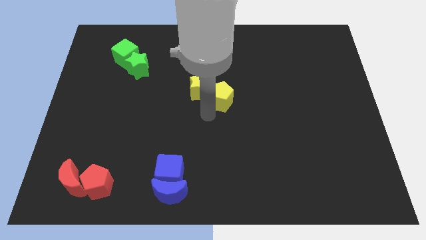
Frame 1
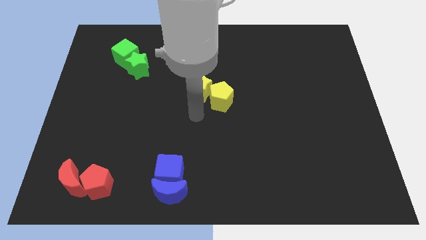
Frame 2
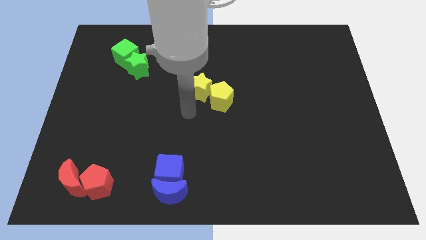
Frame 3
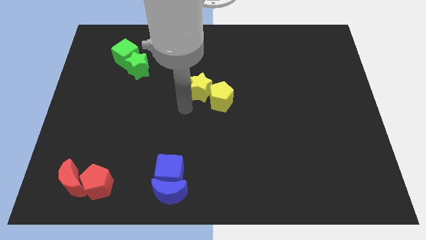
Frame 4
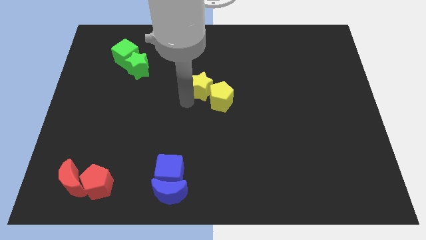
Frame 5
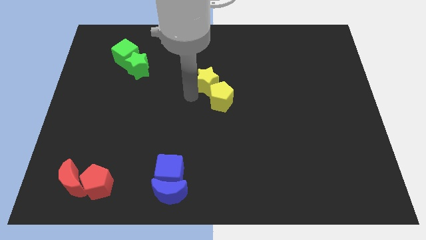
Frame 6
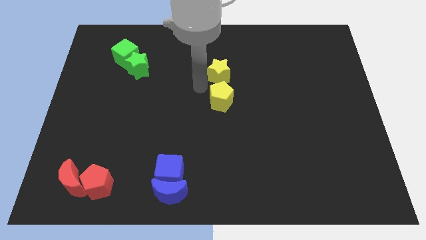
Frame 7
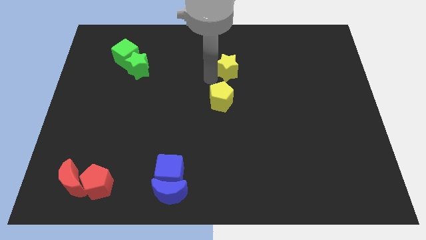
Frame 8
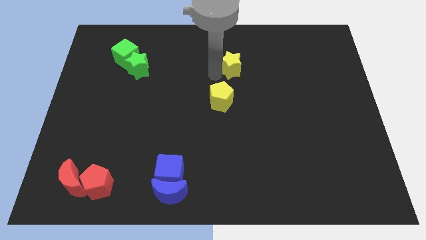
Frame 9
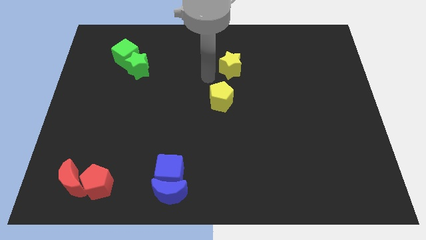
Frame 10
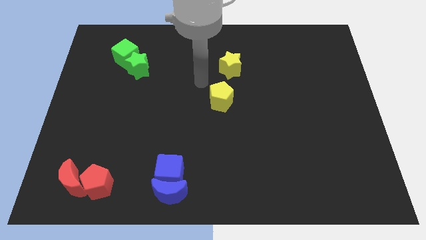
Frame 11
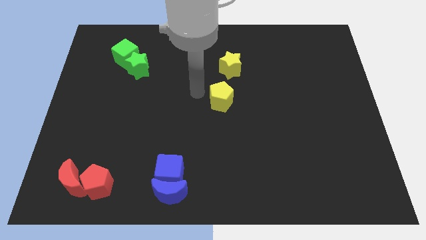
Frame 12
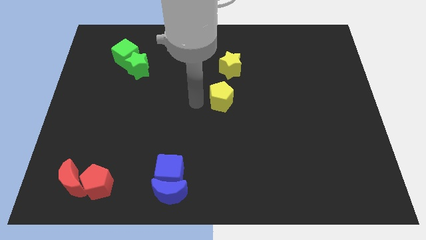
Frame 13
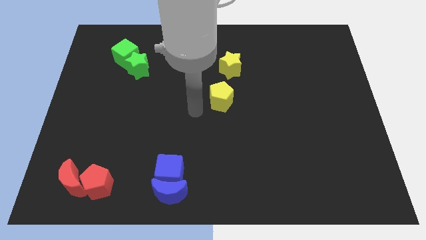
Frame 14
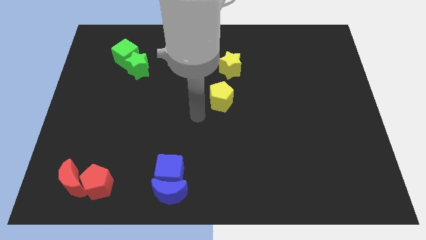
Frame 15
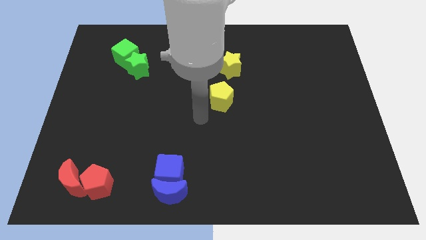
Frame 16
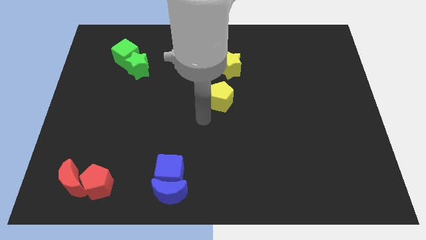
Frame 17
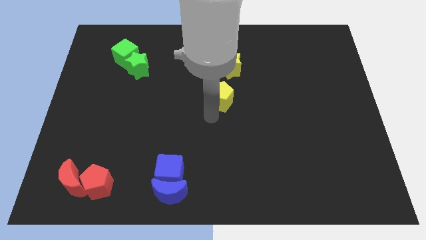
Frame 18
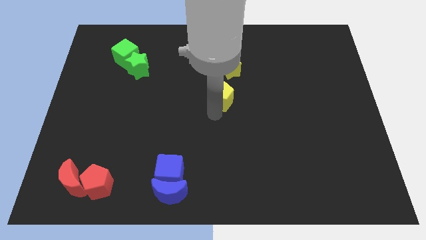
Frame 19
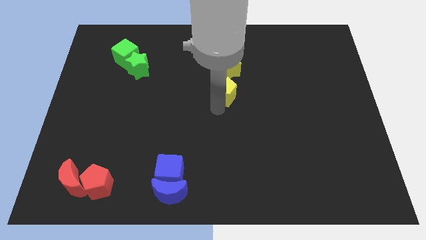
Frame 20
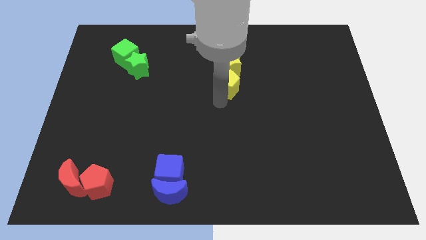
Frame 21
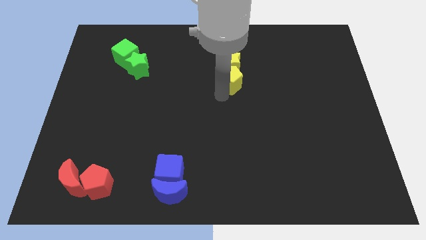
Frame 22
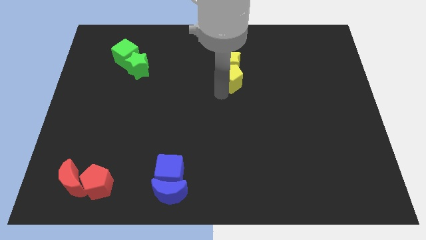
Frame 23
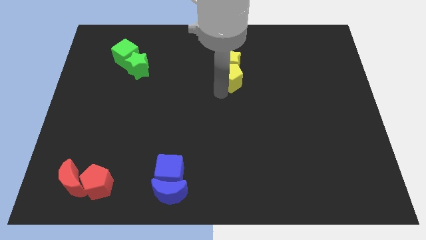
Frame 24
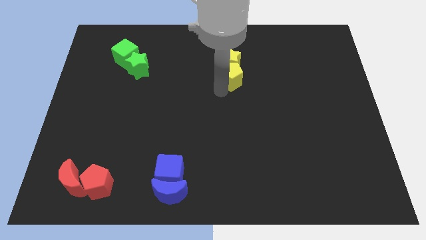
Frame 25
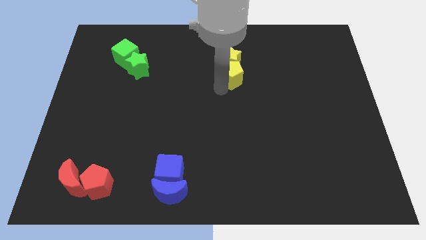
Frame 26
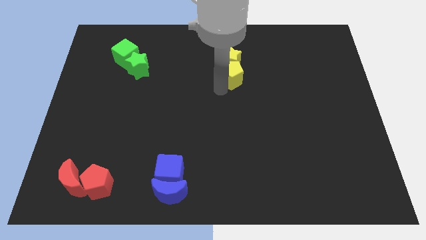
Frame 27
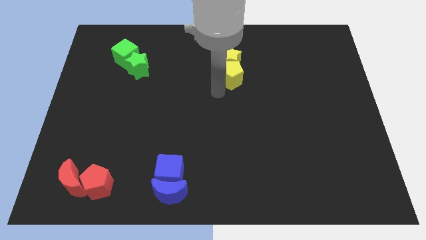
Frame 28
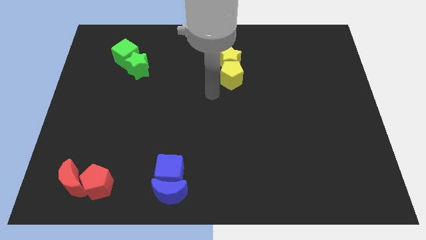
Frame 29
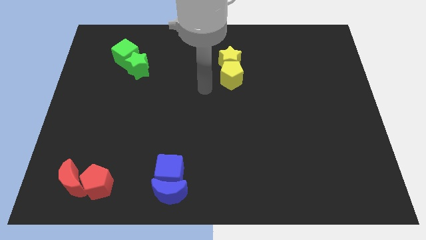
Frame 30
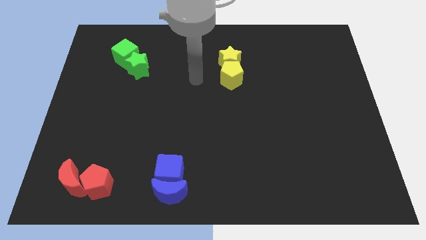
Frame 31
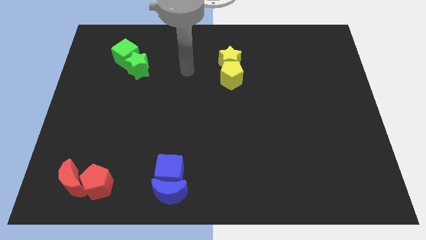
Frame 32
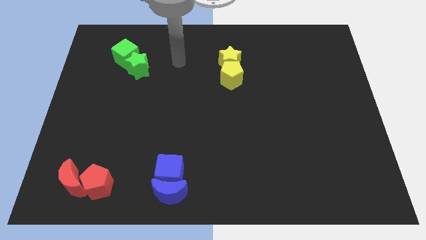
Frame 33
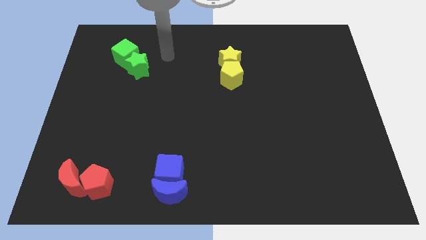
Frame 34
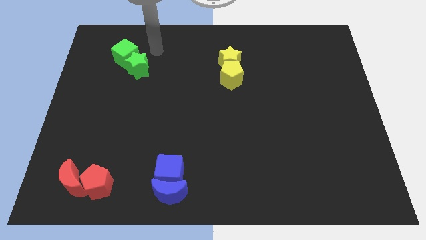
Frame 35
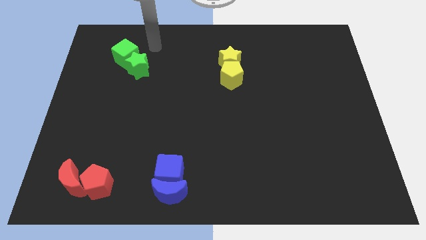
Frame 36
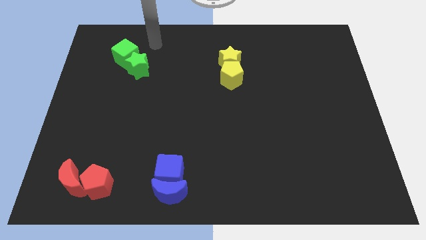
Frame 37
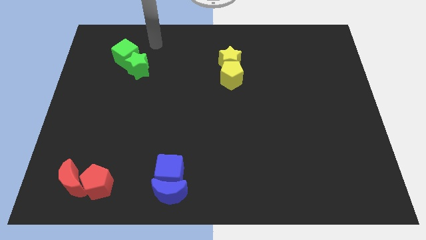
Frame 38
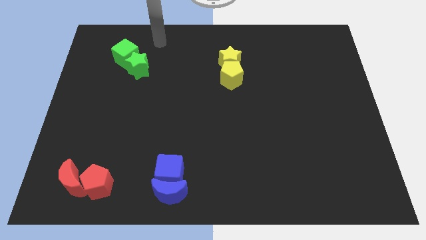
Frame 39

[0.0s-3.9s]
push yellow pentagon into yellow star

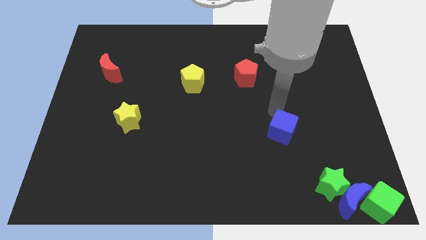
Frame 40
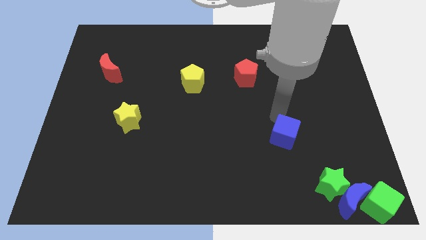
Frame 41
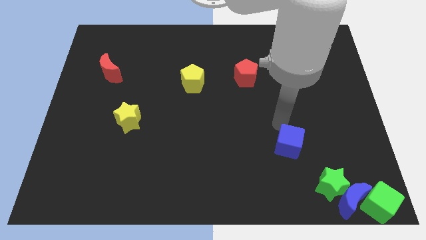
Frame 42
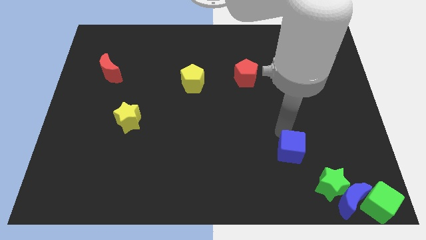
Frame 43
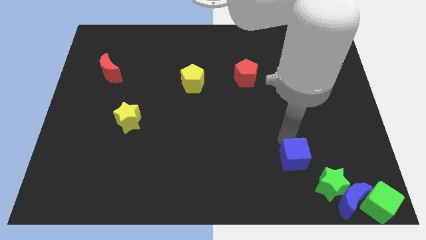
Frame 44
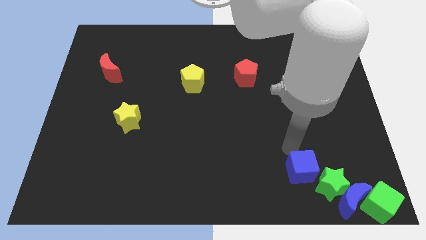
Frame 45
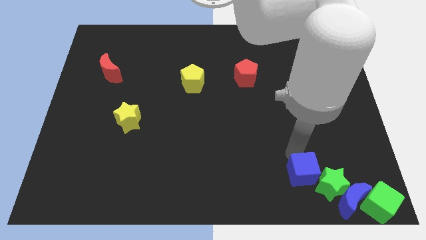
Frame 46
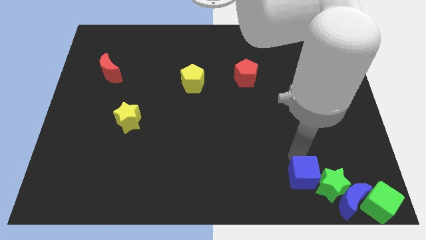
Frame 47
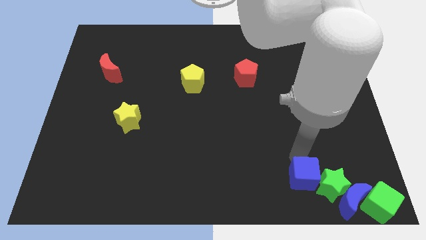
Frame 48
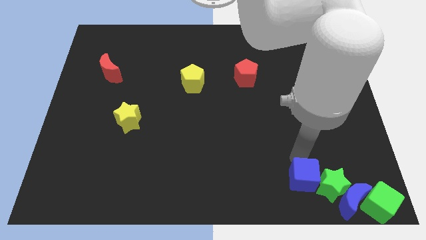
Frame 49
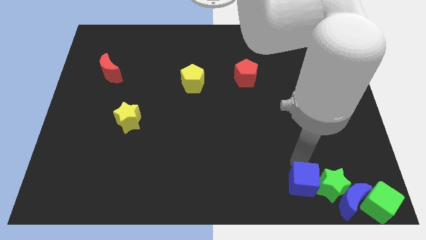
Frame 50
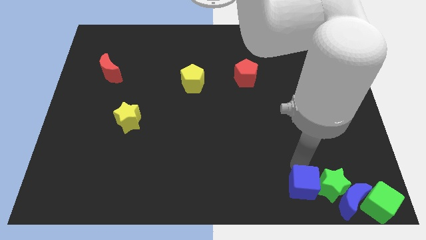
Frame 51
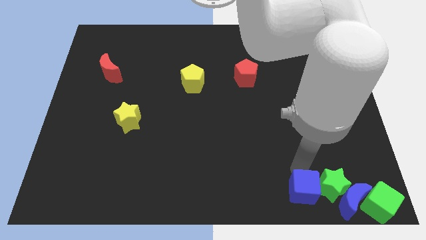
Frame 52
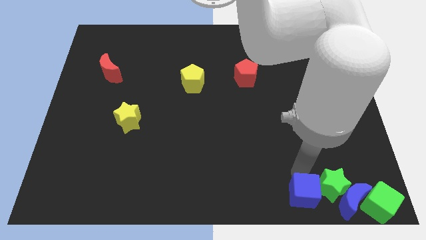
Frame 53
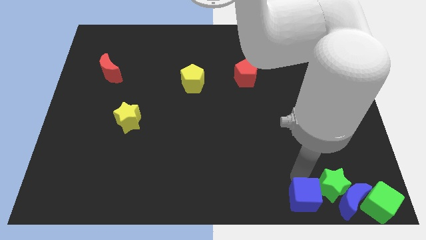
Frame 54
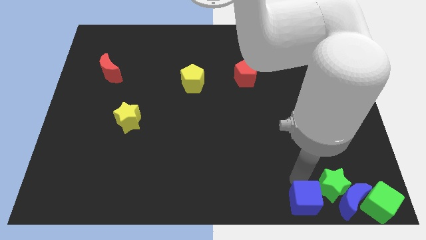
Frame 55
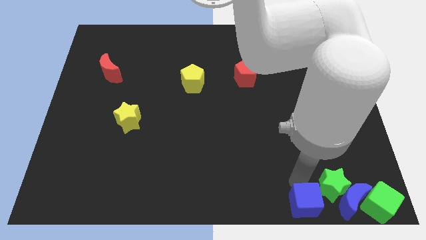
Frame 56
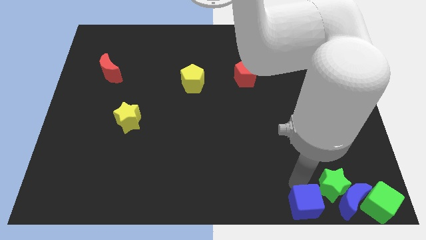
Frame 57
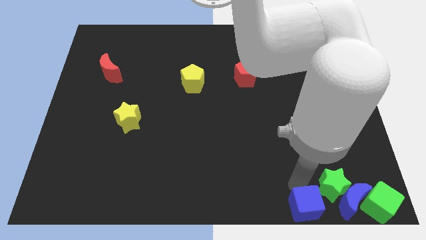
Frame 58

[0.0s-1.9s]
push blue cube to the bottom of the board

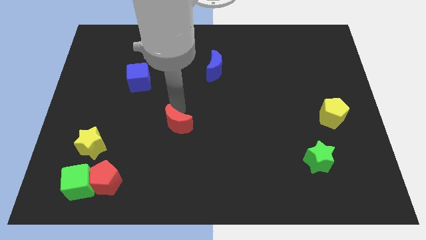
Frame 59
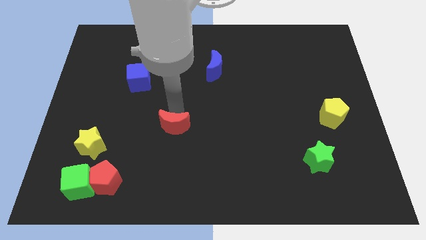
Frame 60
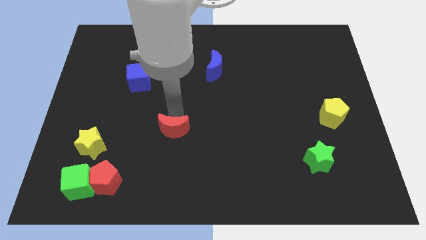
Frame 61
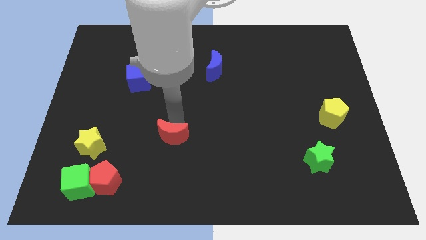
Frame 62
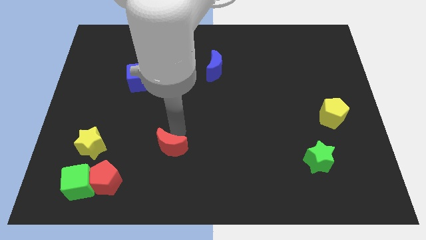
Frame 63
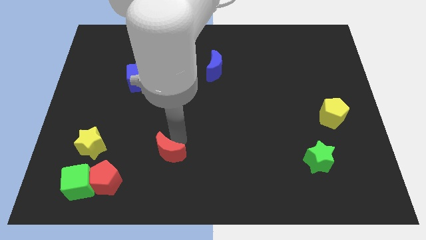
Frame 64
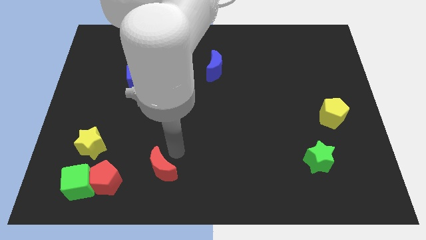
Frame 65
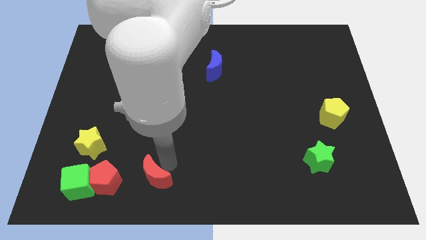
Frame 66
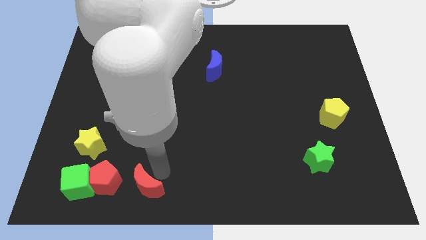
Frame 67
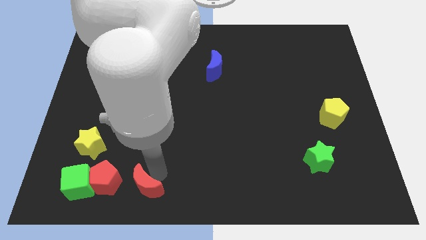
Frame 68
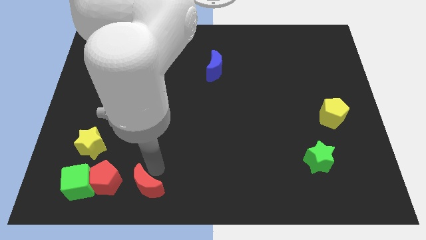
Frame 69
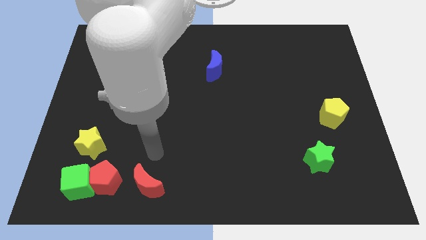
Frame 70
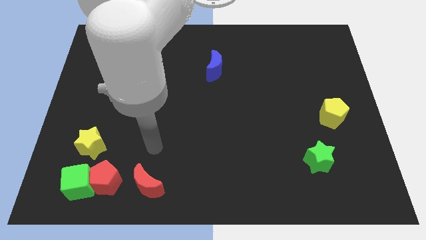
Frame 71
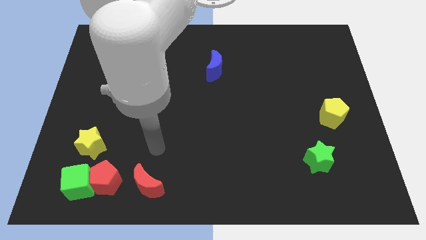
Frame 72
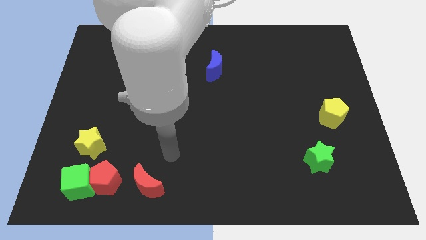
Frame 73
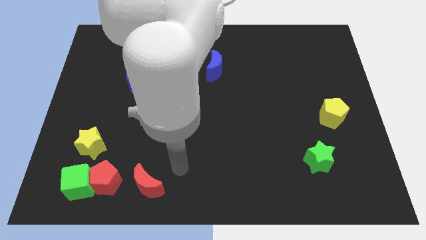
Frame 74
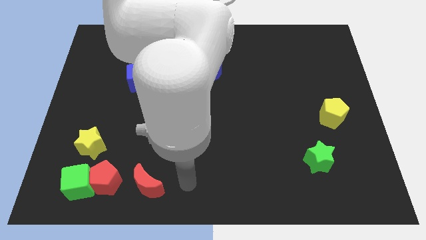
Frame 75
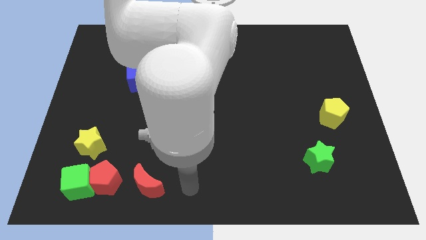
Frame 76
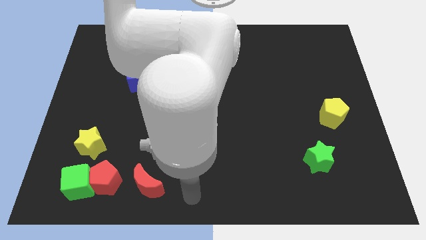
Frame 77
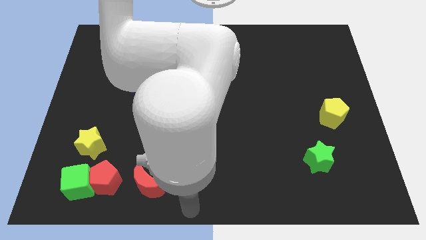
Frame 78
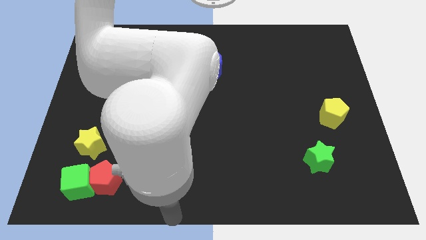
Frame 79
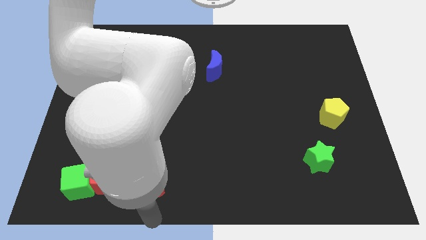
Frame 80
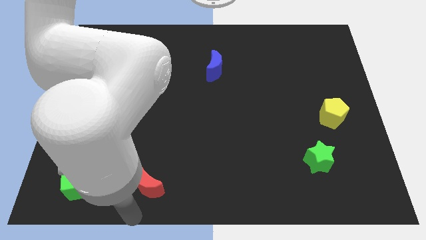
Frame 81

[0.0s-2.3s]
place red moon to the right of red pentagon

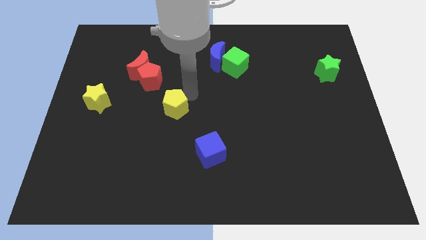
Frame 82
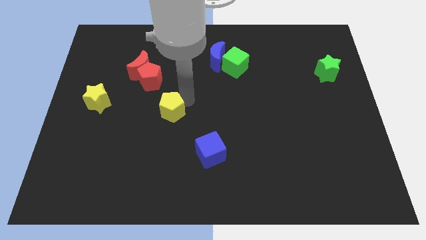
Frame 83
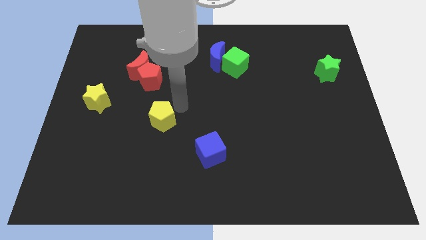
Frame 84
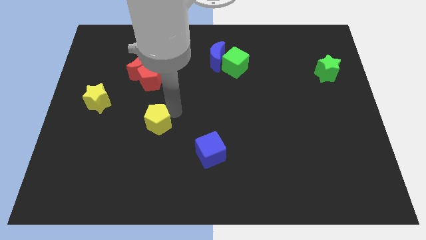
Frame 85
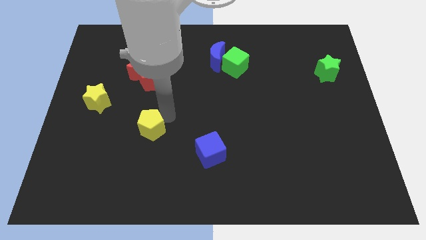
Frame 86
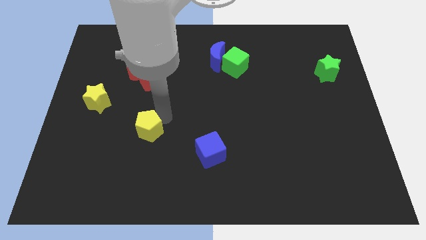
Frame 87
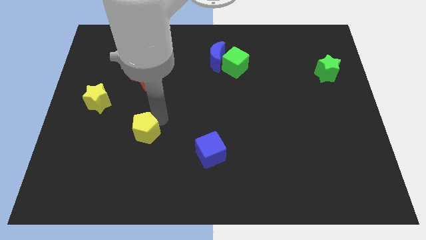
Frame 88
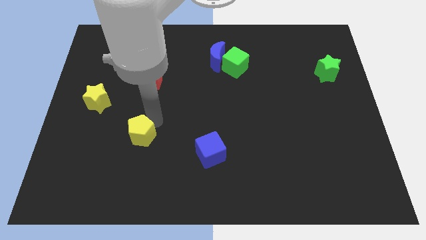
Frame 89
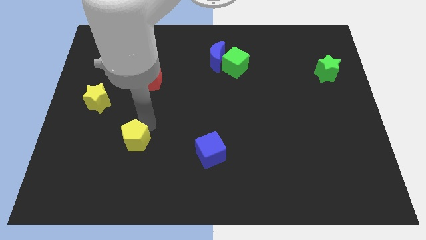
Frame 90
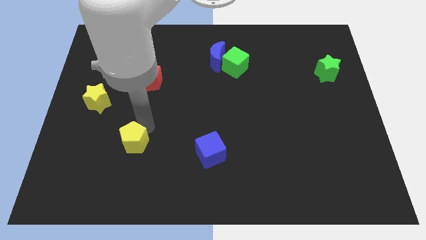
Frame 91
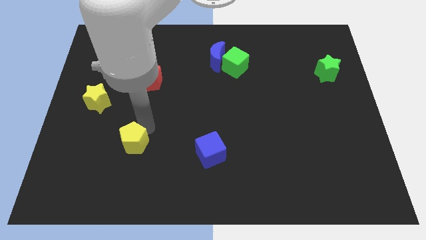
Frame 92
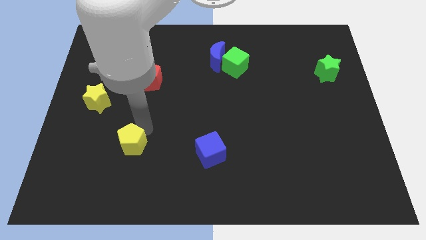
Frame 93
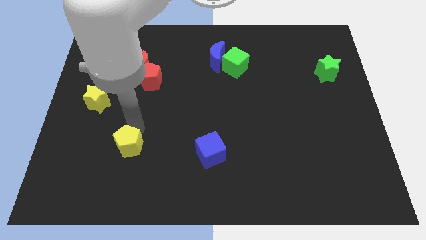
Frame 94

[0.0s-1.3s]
push the yellow pentagon diagonally bottom right to yellow star
